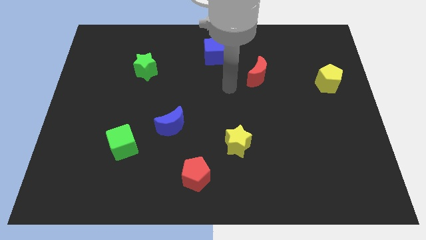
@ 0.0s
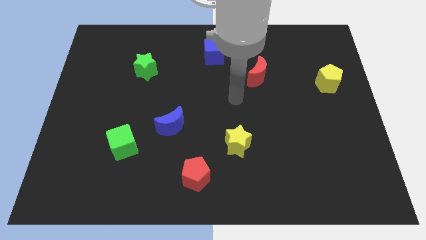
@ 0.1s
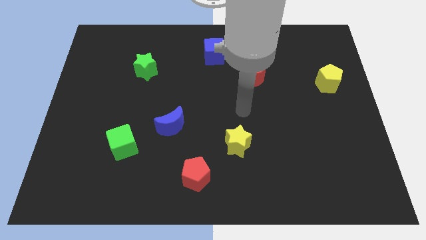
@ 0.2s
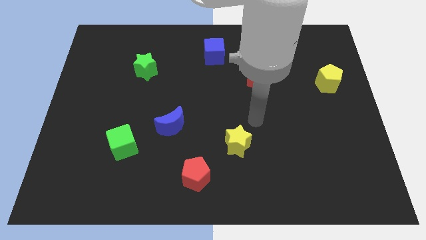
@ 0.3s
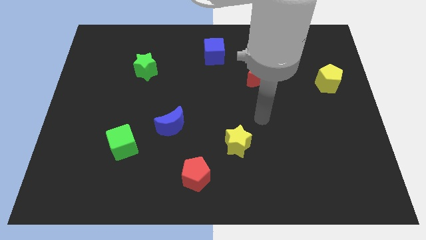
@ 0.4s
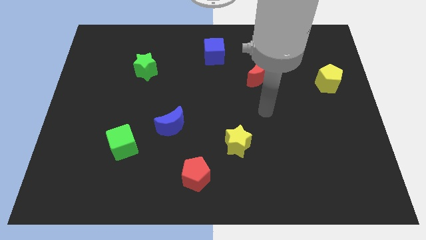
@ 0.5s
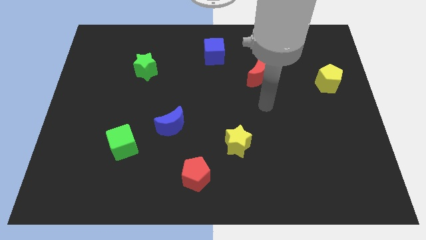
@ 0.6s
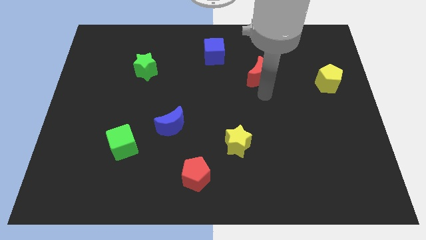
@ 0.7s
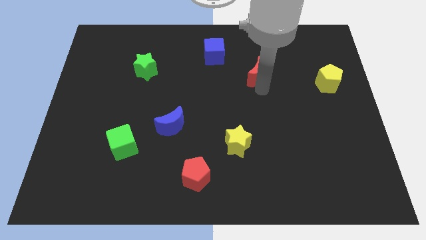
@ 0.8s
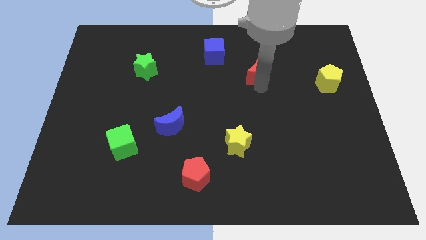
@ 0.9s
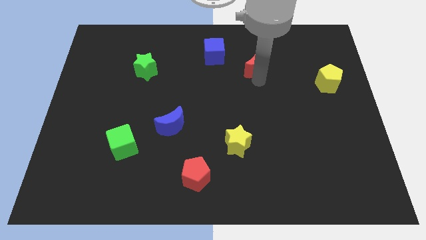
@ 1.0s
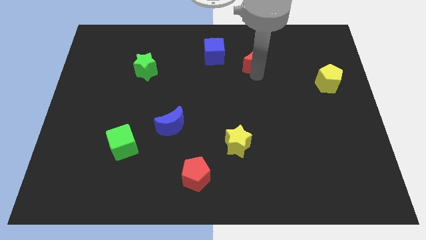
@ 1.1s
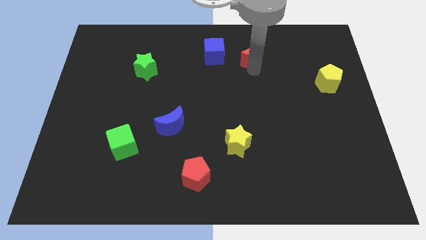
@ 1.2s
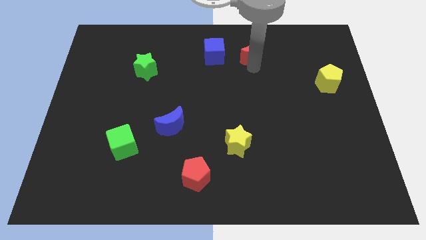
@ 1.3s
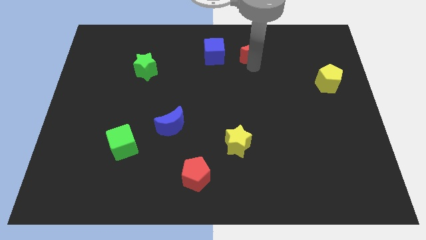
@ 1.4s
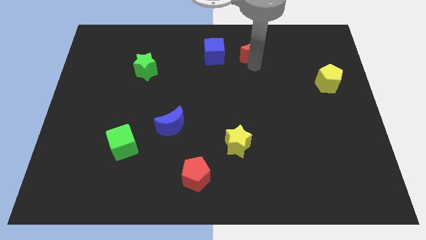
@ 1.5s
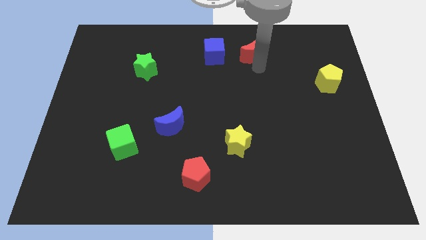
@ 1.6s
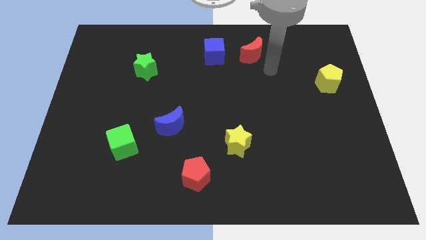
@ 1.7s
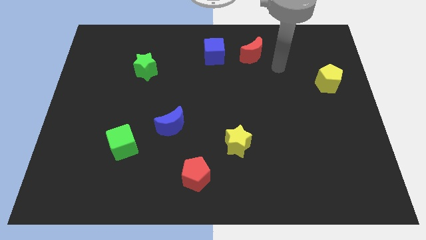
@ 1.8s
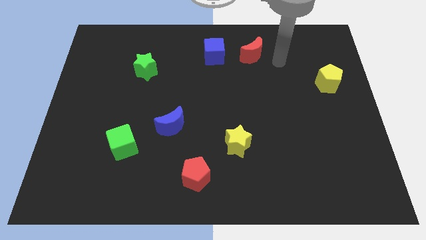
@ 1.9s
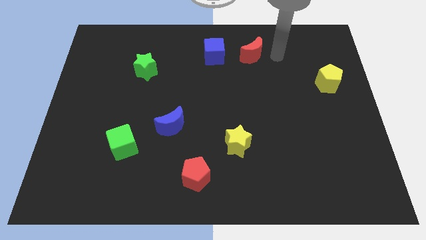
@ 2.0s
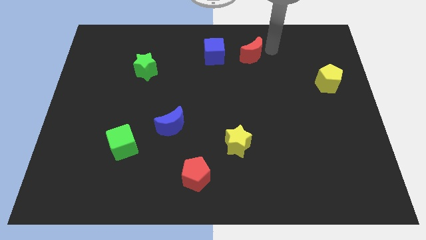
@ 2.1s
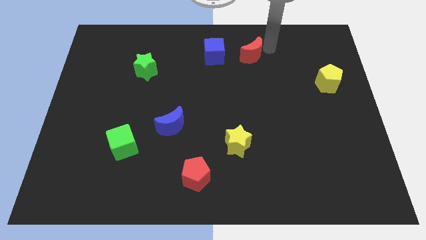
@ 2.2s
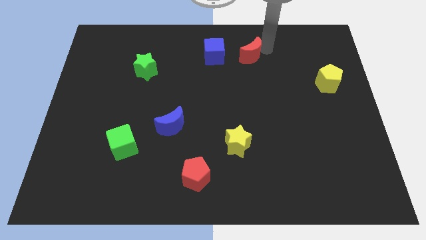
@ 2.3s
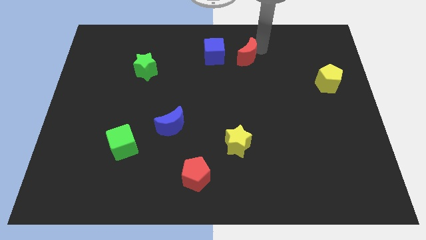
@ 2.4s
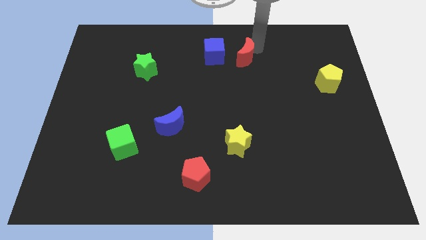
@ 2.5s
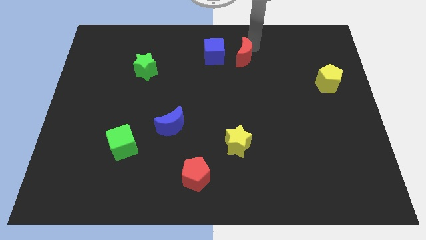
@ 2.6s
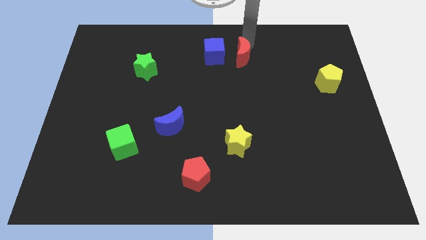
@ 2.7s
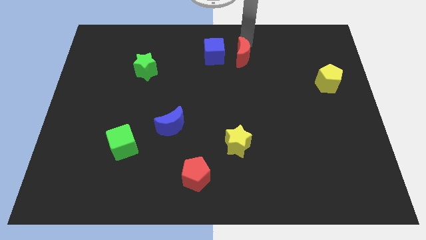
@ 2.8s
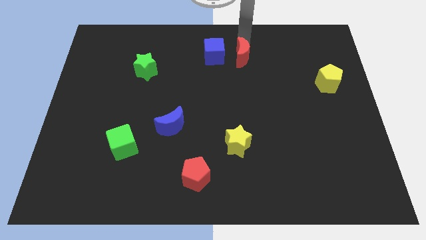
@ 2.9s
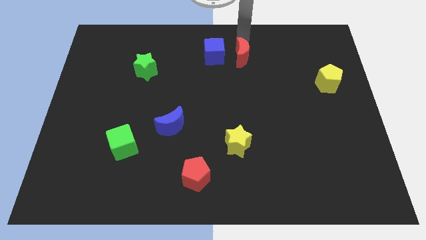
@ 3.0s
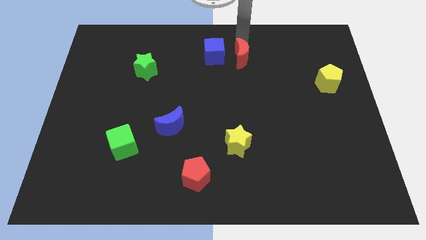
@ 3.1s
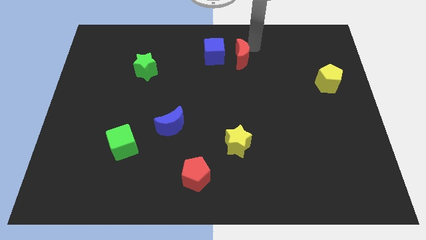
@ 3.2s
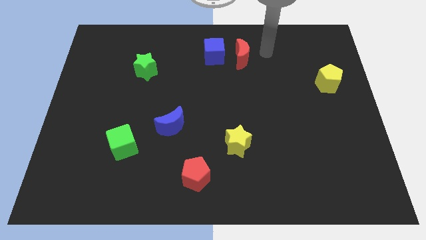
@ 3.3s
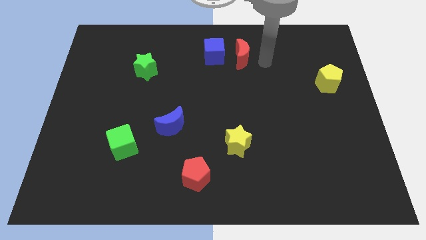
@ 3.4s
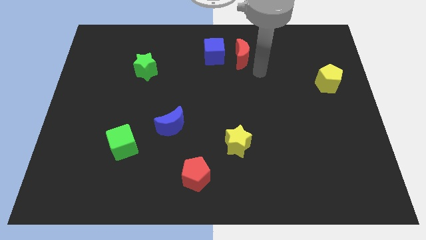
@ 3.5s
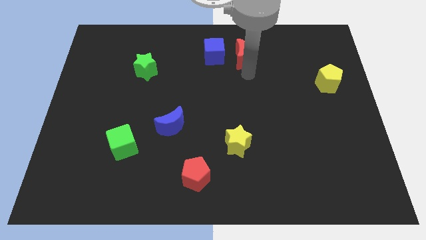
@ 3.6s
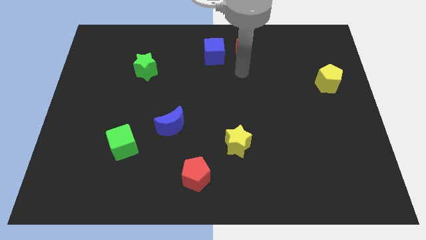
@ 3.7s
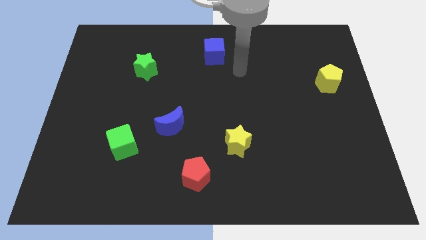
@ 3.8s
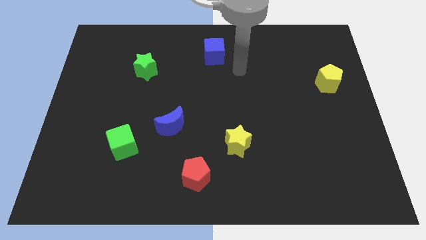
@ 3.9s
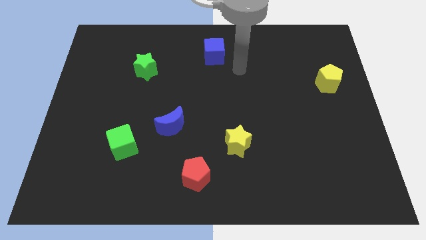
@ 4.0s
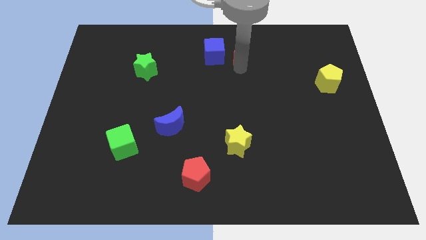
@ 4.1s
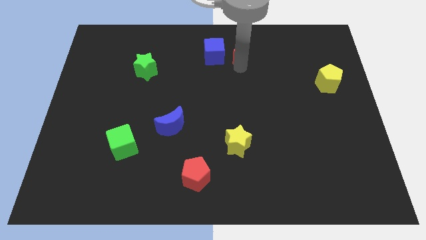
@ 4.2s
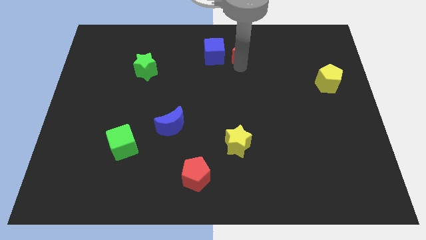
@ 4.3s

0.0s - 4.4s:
push the red crescent to the right of the blue cube

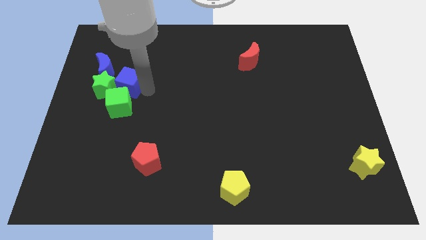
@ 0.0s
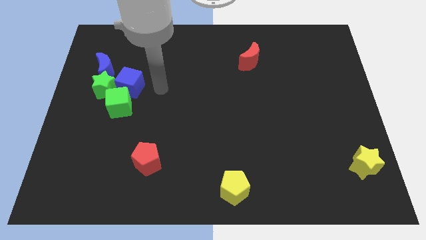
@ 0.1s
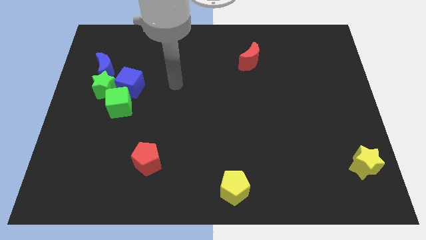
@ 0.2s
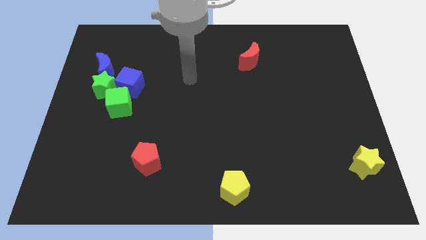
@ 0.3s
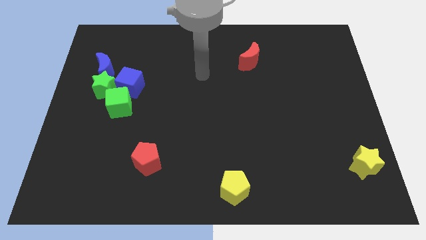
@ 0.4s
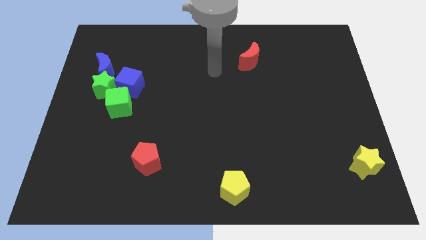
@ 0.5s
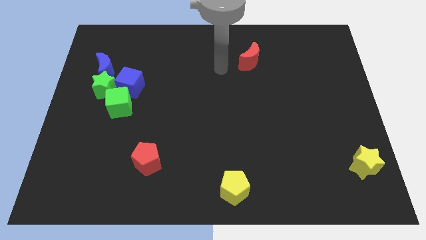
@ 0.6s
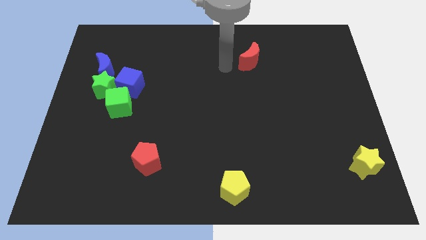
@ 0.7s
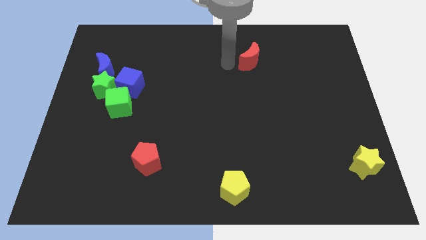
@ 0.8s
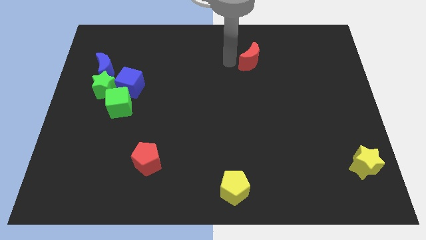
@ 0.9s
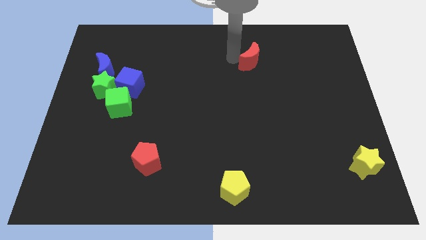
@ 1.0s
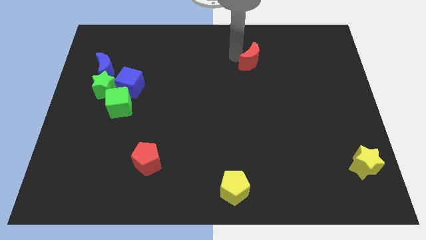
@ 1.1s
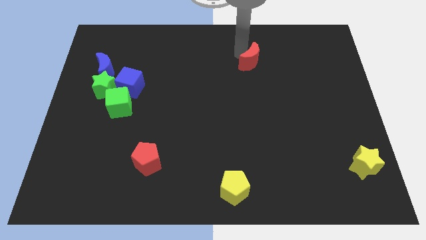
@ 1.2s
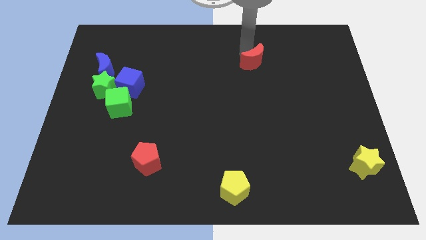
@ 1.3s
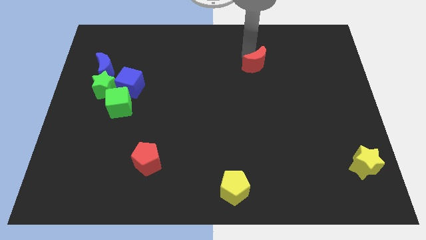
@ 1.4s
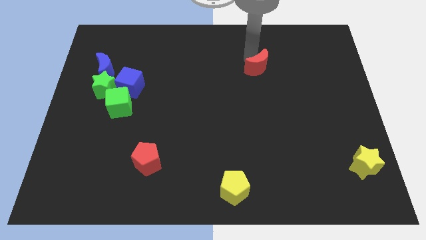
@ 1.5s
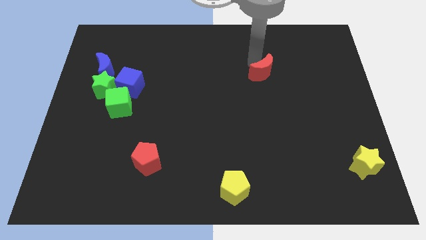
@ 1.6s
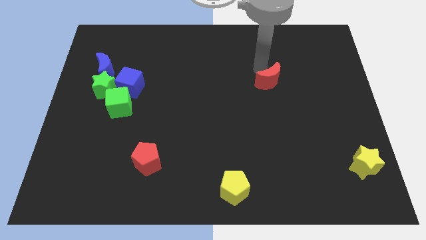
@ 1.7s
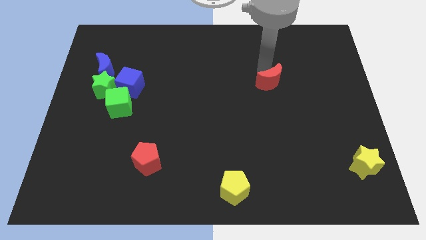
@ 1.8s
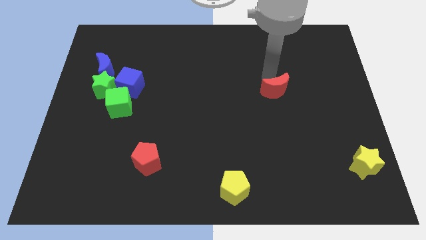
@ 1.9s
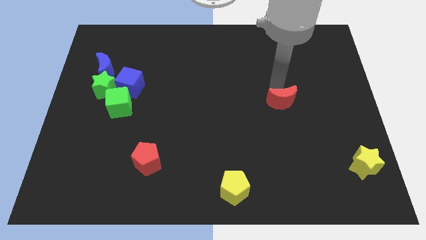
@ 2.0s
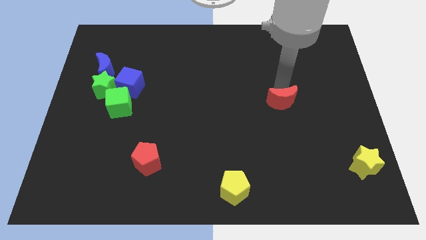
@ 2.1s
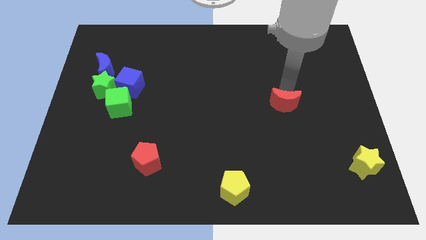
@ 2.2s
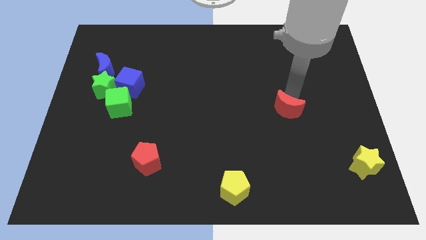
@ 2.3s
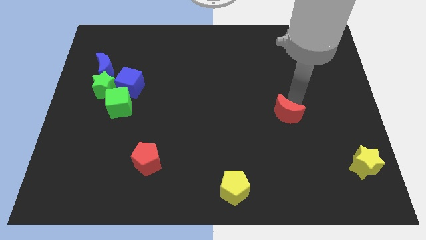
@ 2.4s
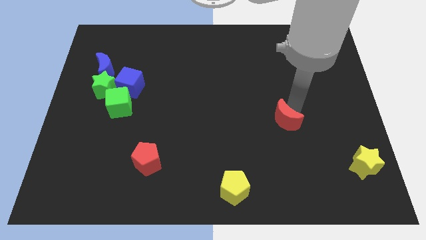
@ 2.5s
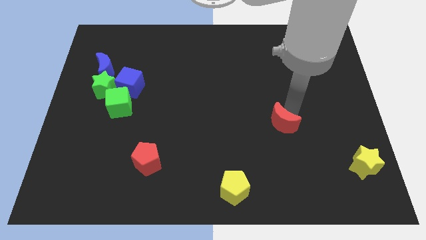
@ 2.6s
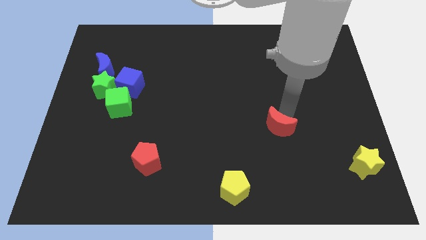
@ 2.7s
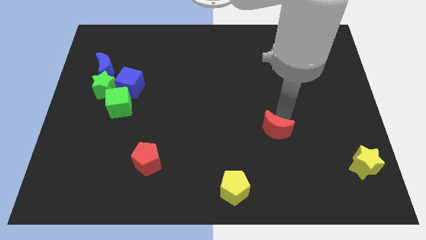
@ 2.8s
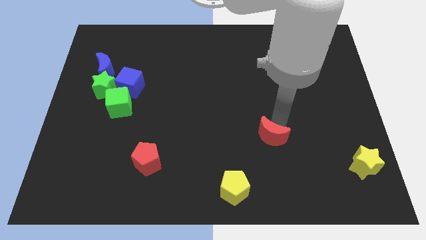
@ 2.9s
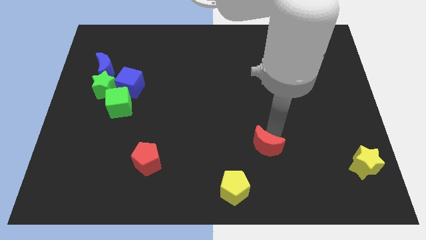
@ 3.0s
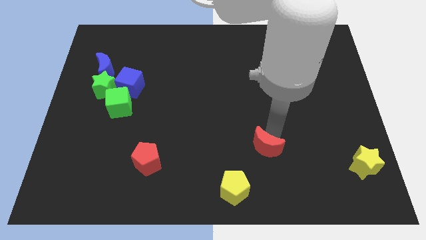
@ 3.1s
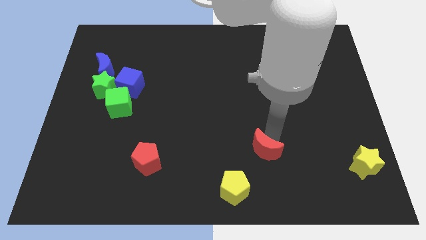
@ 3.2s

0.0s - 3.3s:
move the red crescent to the top right of the yellow pentagon

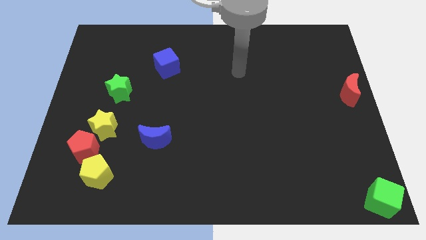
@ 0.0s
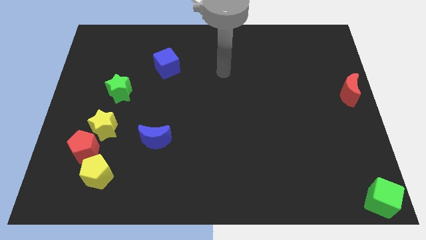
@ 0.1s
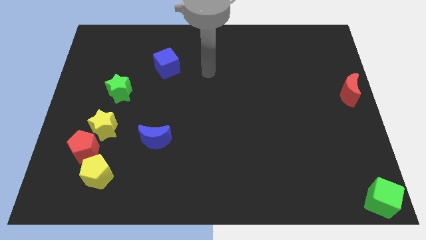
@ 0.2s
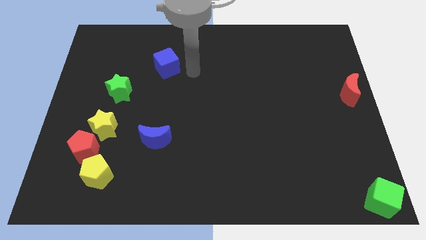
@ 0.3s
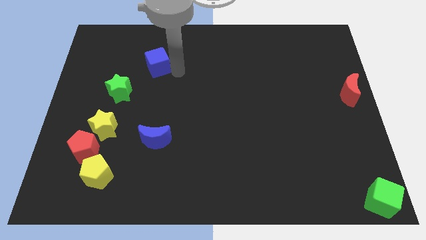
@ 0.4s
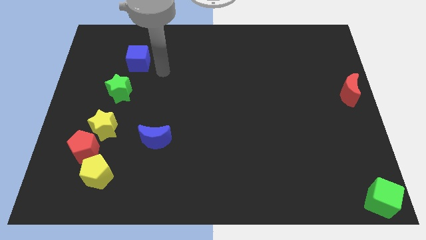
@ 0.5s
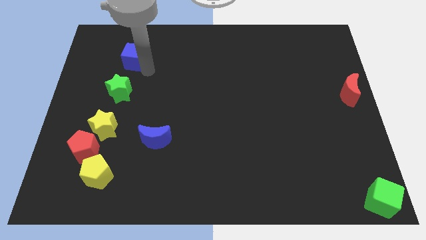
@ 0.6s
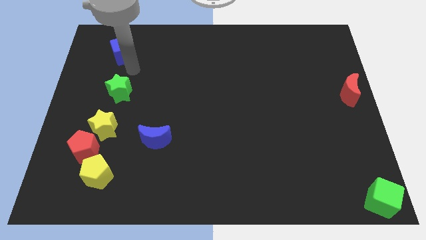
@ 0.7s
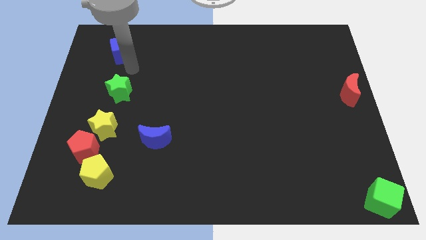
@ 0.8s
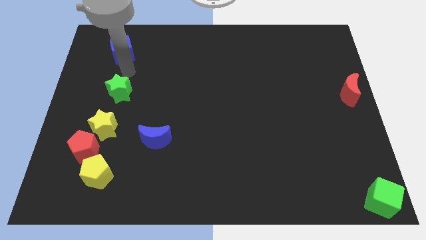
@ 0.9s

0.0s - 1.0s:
place the blue cube above the green star

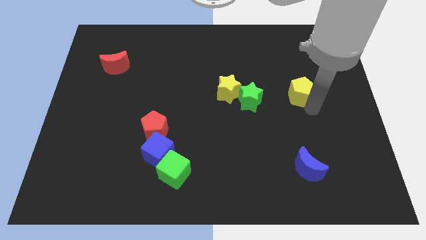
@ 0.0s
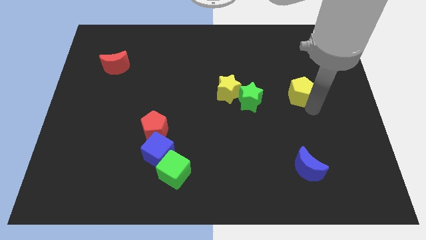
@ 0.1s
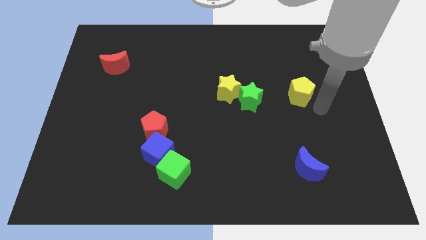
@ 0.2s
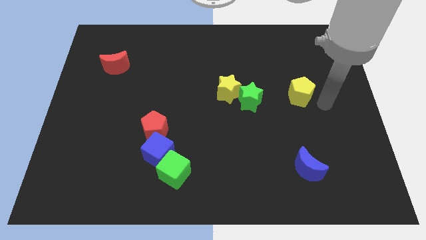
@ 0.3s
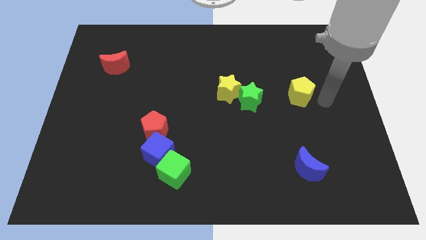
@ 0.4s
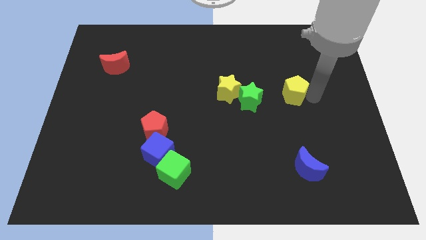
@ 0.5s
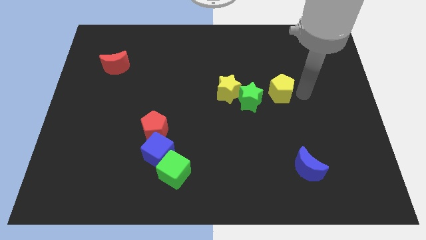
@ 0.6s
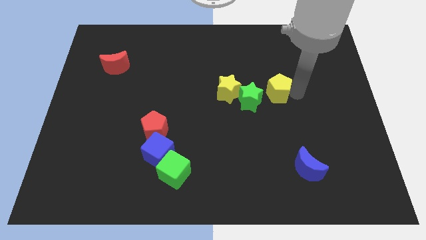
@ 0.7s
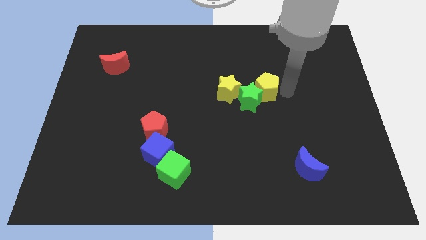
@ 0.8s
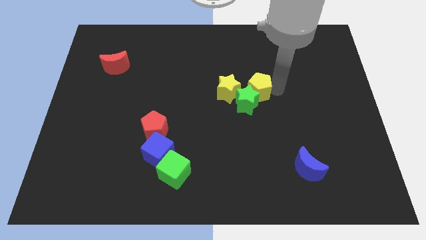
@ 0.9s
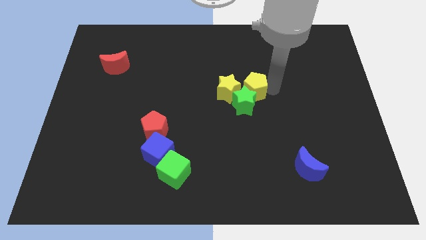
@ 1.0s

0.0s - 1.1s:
place yellow pentagon above green star
